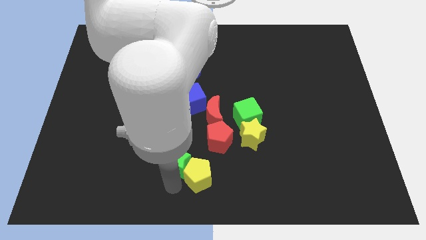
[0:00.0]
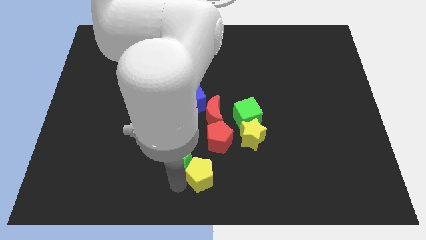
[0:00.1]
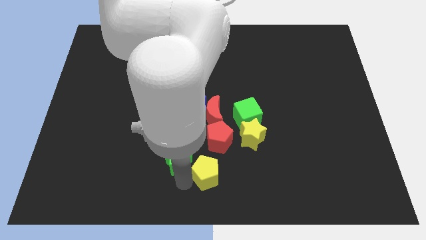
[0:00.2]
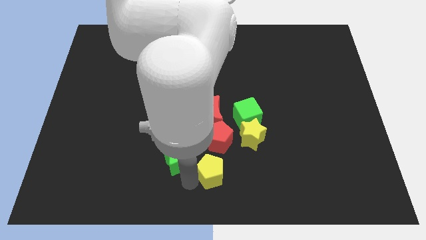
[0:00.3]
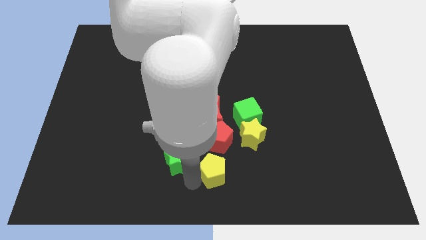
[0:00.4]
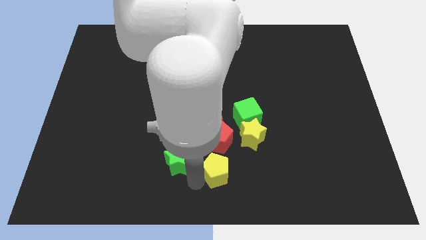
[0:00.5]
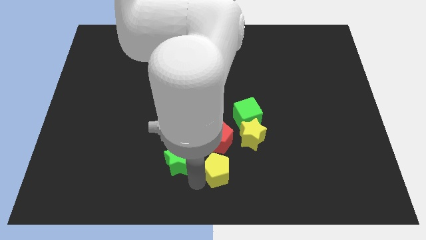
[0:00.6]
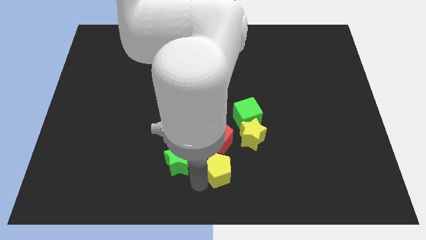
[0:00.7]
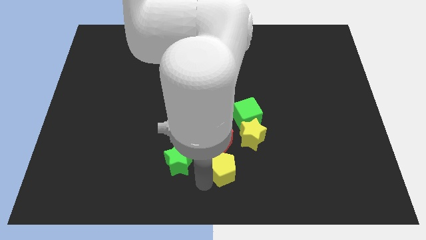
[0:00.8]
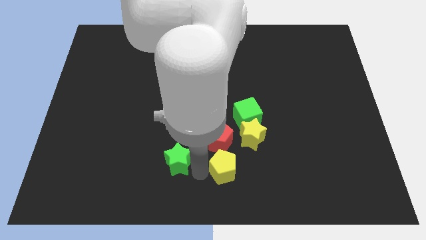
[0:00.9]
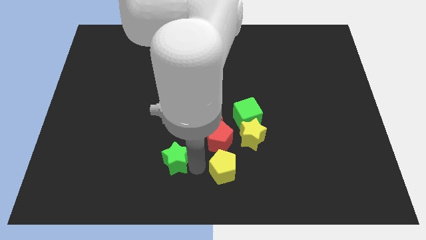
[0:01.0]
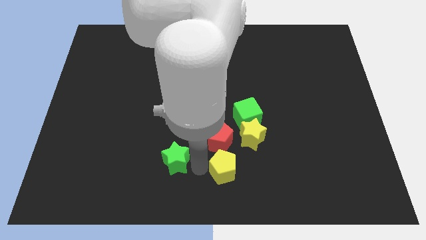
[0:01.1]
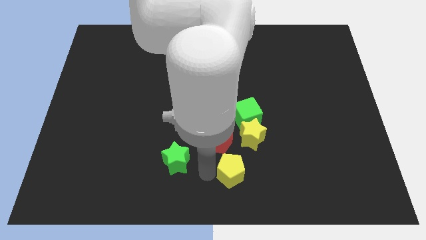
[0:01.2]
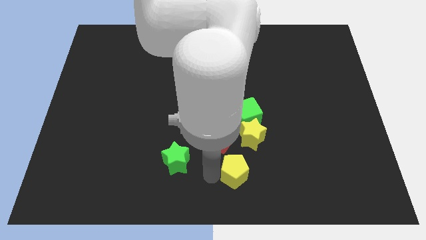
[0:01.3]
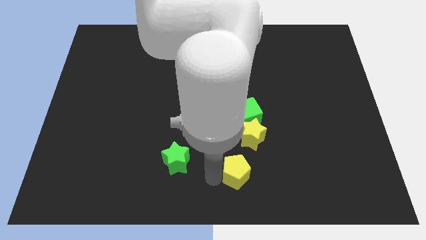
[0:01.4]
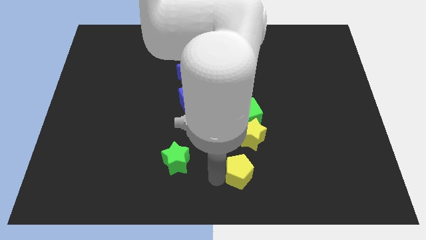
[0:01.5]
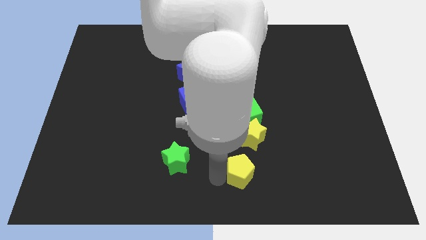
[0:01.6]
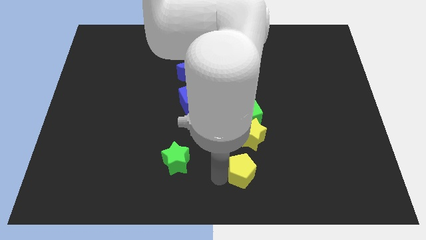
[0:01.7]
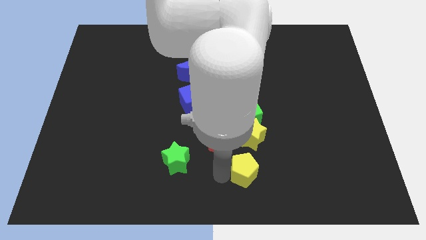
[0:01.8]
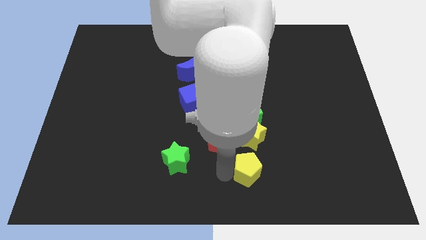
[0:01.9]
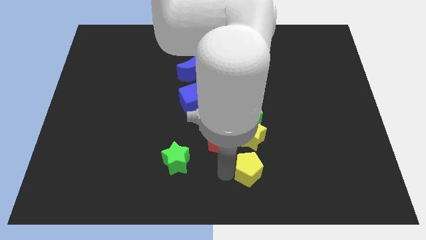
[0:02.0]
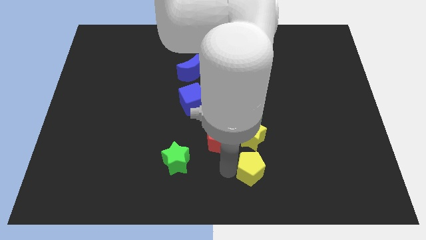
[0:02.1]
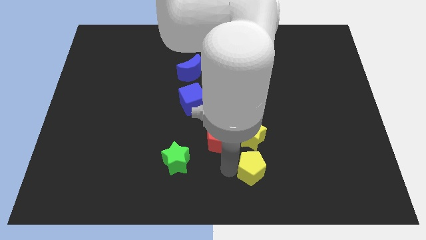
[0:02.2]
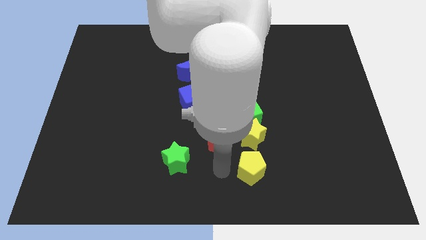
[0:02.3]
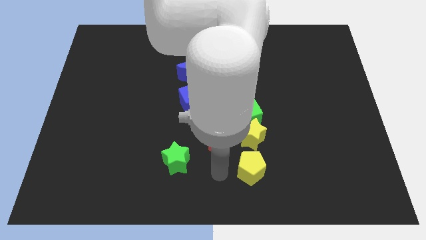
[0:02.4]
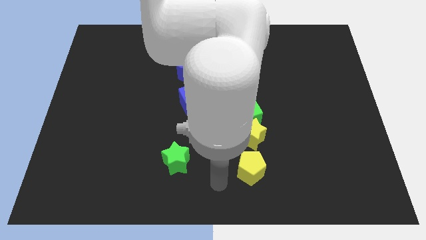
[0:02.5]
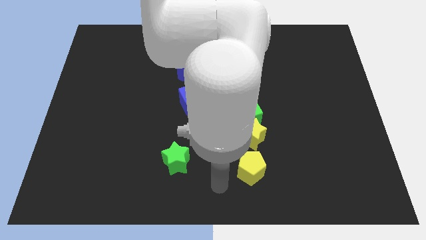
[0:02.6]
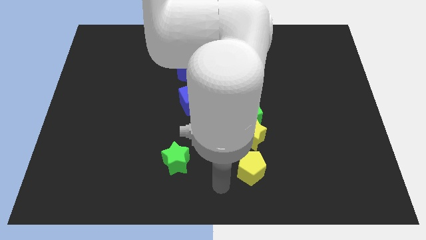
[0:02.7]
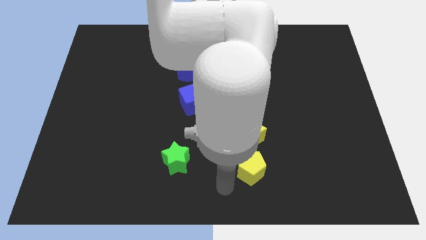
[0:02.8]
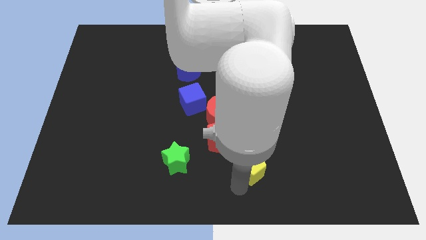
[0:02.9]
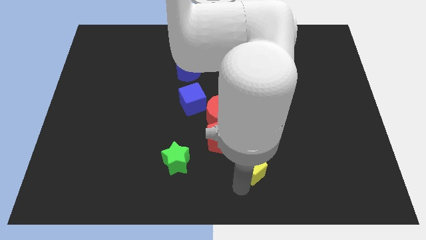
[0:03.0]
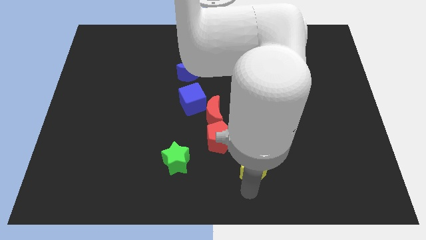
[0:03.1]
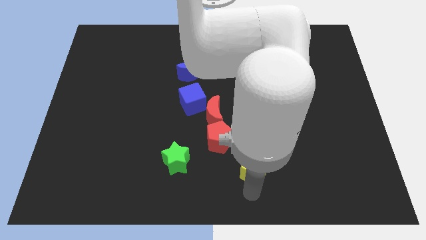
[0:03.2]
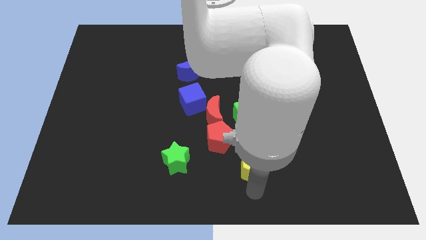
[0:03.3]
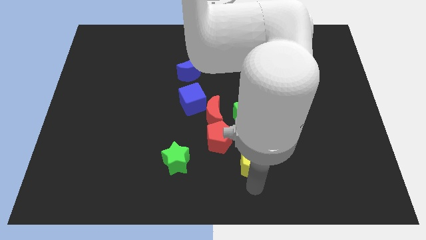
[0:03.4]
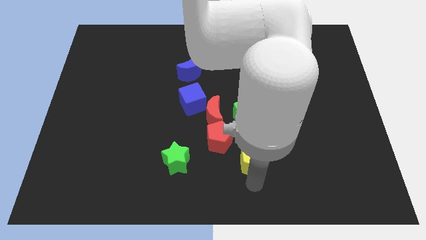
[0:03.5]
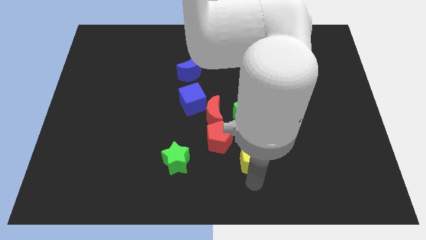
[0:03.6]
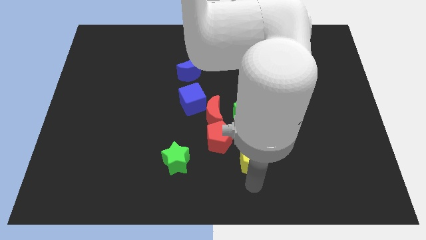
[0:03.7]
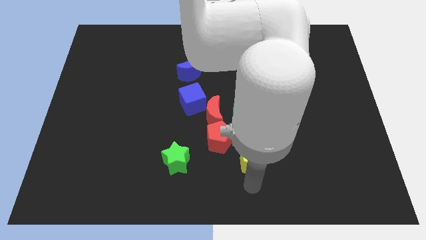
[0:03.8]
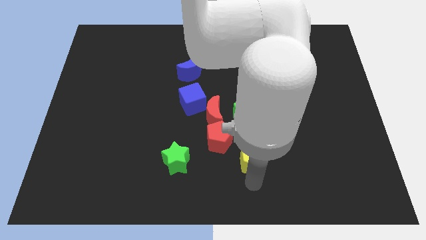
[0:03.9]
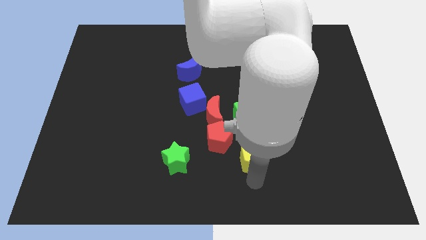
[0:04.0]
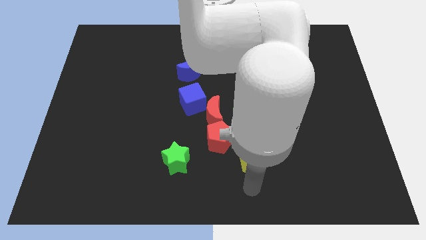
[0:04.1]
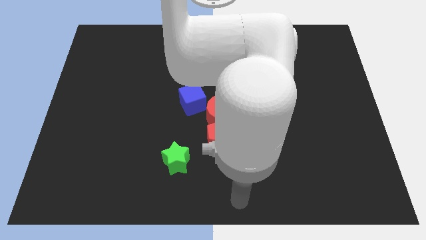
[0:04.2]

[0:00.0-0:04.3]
place yellow pentagon below yellow star

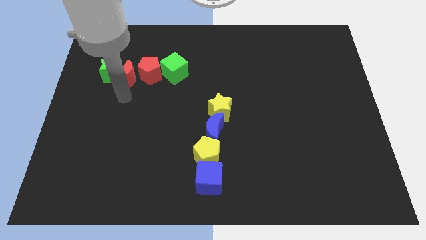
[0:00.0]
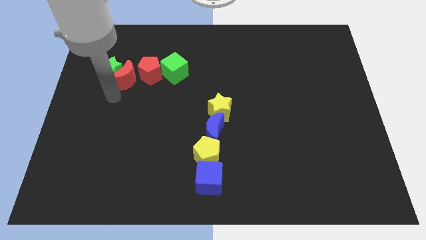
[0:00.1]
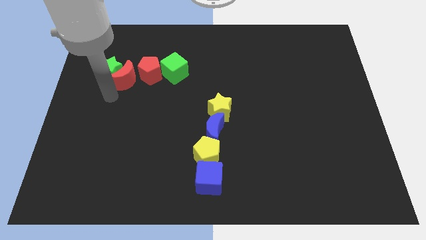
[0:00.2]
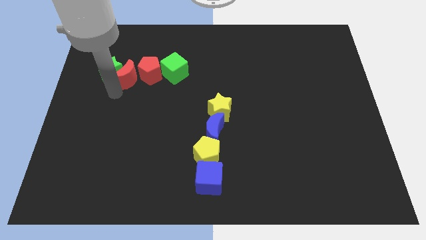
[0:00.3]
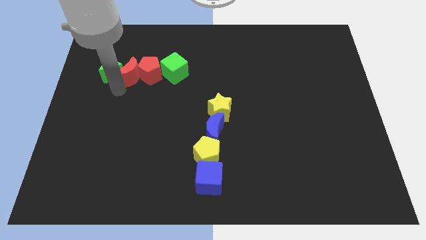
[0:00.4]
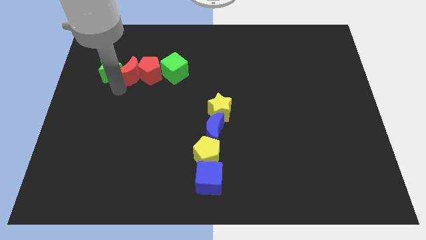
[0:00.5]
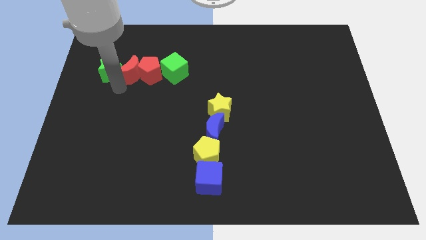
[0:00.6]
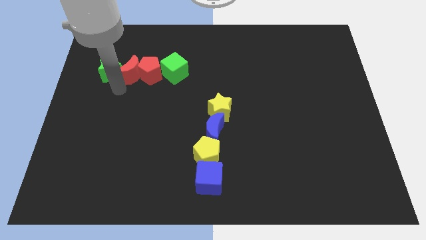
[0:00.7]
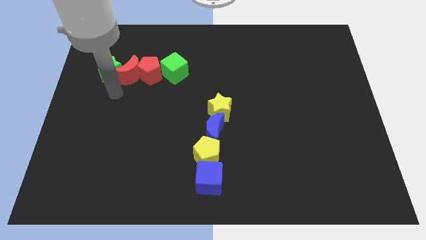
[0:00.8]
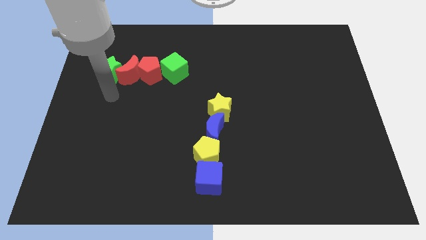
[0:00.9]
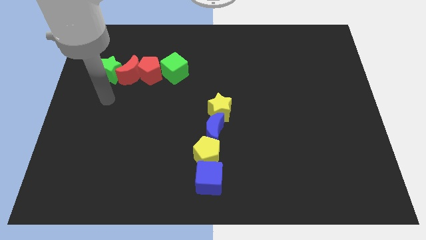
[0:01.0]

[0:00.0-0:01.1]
put the red crescent in between the green star and the red pentagon

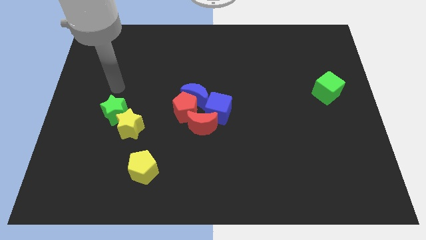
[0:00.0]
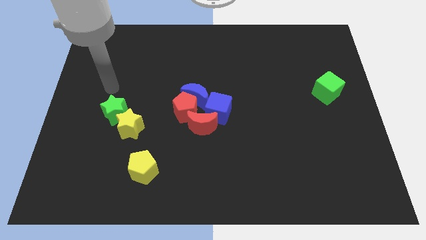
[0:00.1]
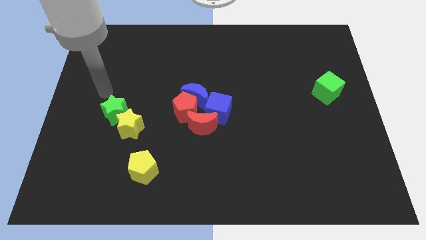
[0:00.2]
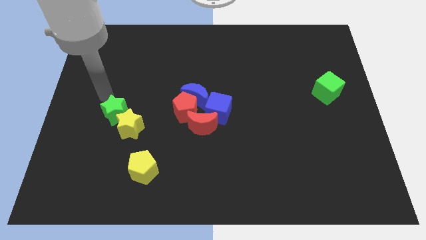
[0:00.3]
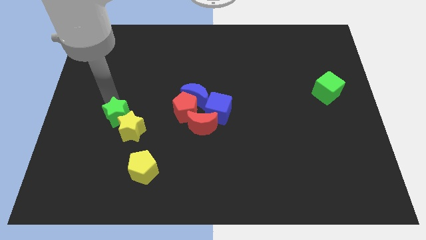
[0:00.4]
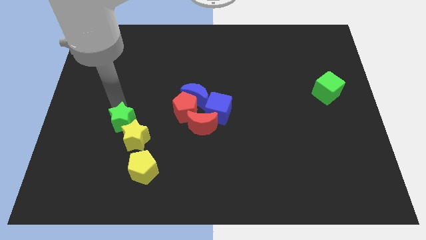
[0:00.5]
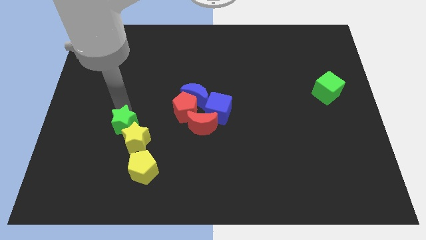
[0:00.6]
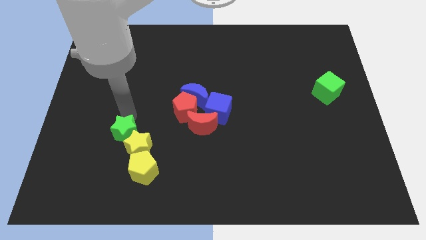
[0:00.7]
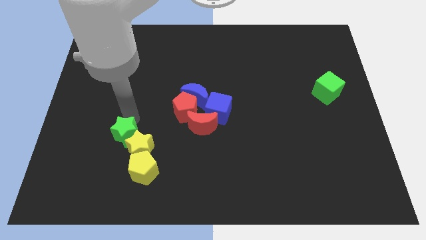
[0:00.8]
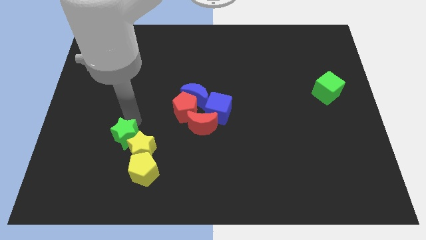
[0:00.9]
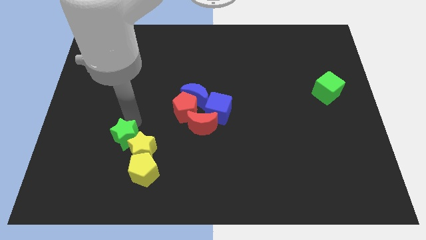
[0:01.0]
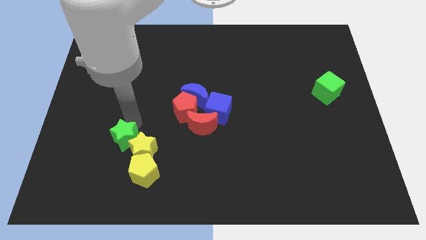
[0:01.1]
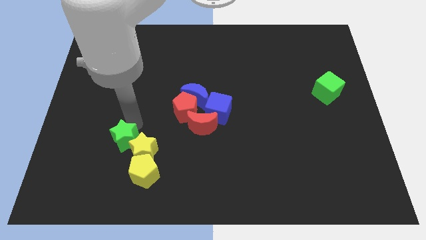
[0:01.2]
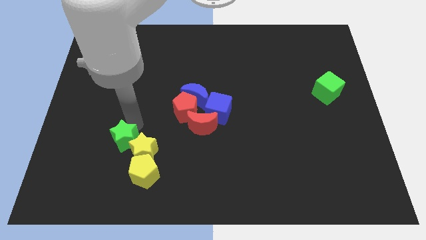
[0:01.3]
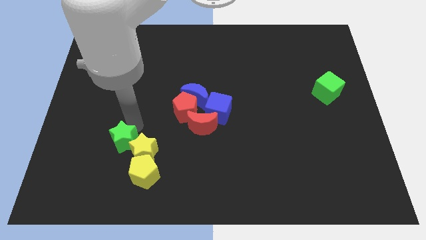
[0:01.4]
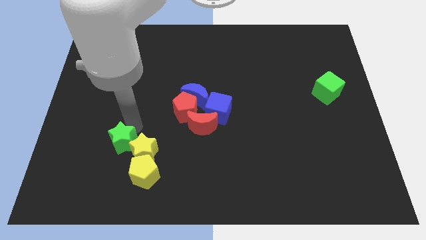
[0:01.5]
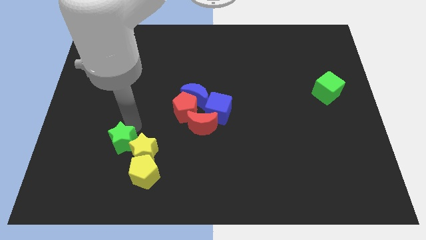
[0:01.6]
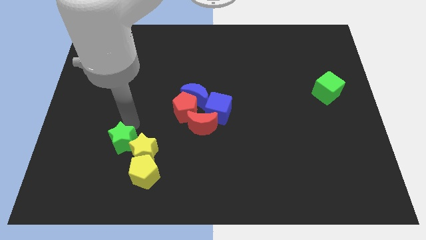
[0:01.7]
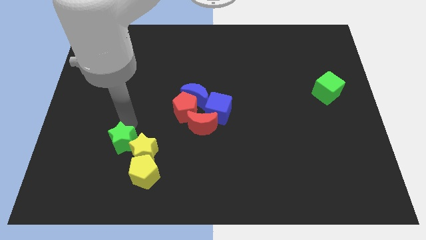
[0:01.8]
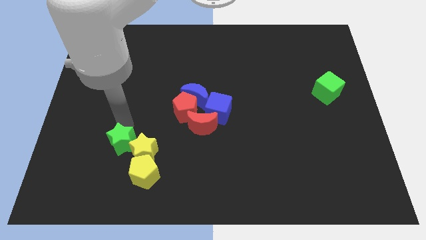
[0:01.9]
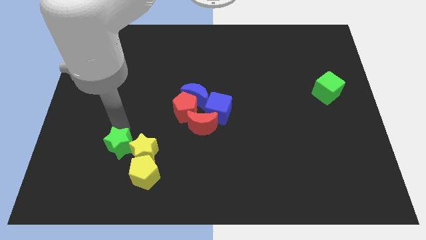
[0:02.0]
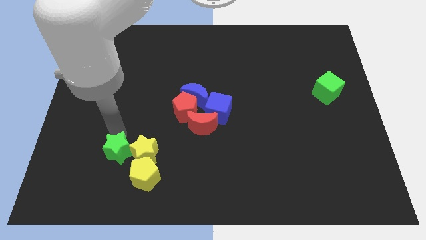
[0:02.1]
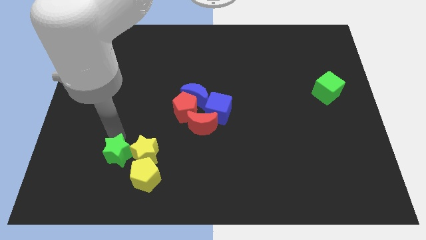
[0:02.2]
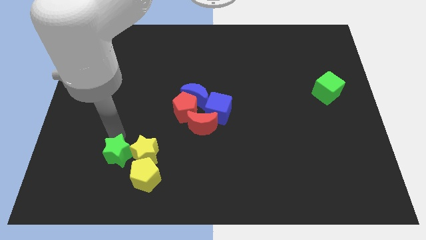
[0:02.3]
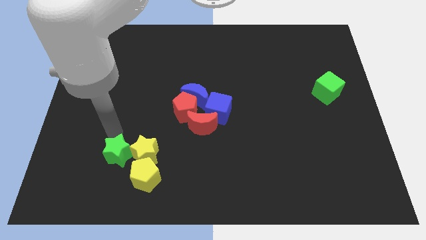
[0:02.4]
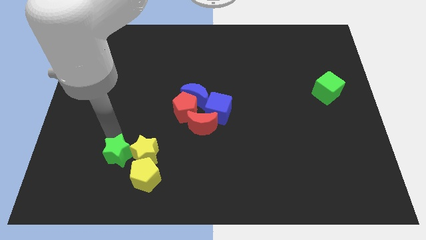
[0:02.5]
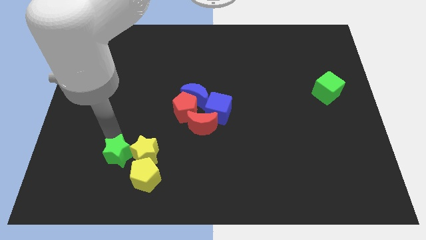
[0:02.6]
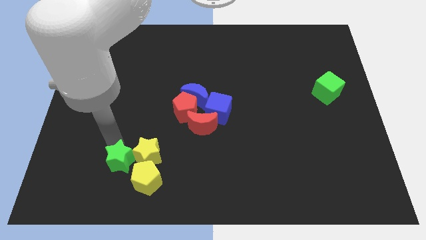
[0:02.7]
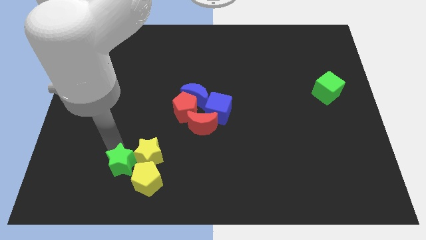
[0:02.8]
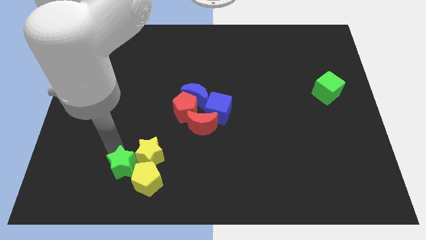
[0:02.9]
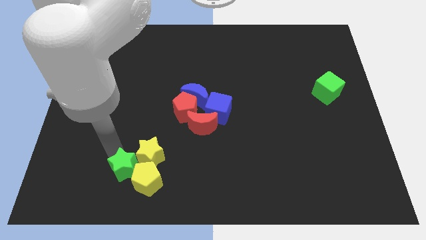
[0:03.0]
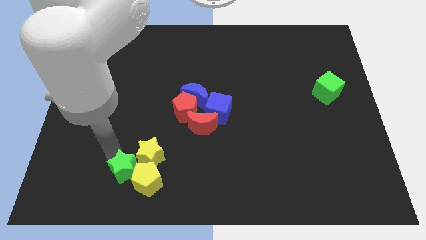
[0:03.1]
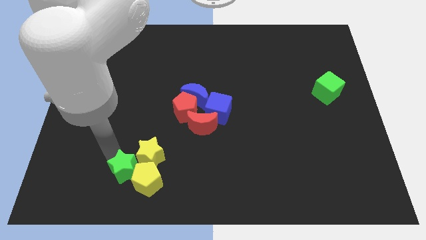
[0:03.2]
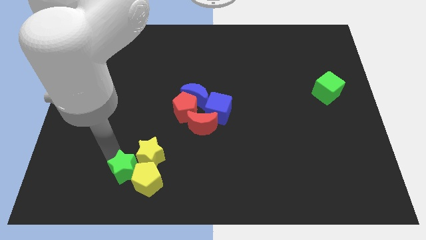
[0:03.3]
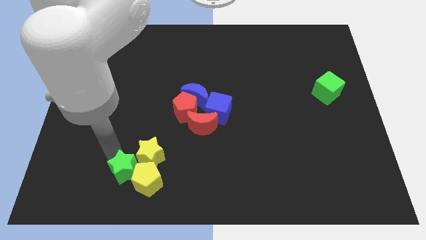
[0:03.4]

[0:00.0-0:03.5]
move the green star into the yellow star above the yellow pentagon
